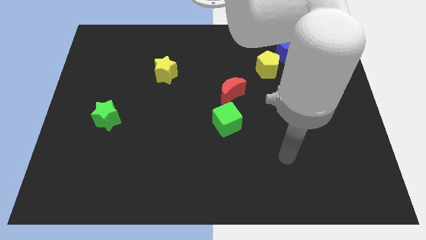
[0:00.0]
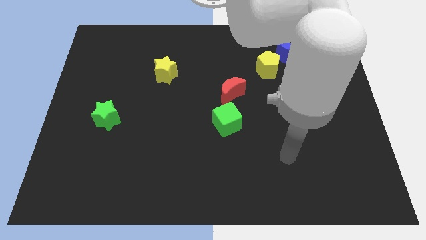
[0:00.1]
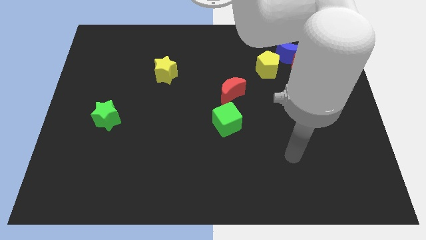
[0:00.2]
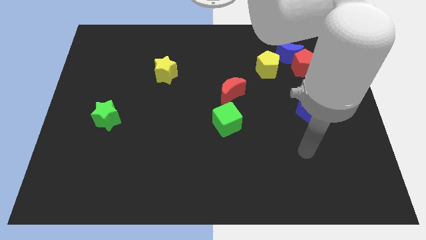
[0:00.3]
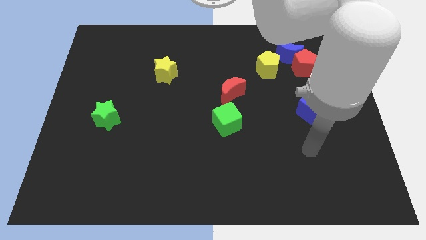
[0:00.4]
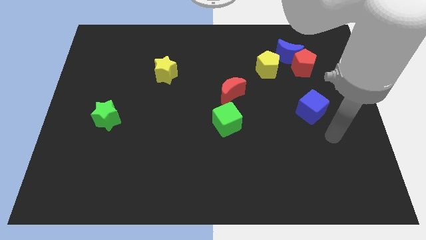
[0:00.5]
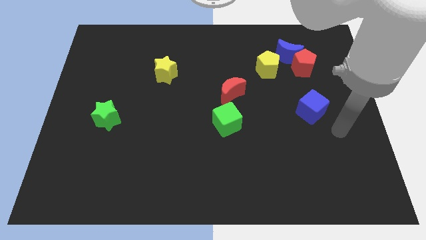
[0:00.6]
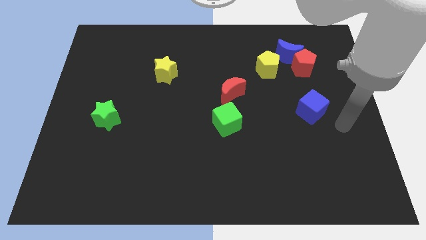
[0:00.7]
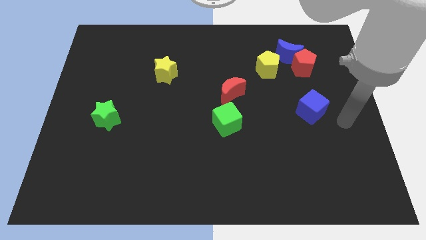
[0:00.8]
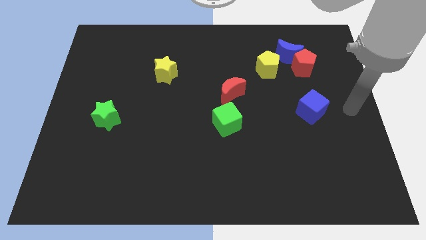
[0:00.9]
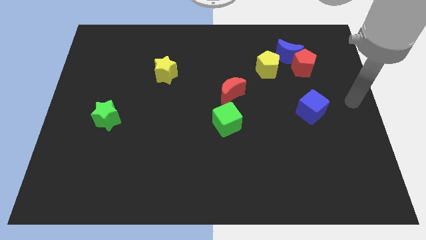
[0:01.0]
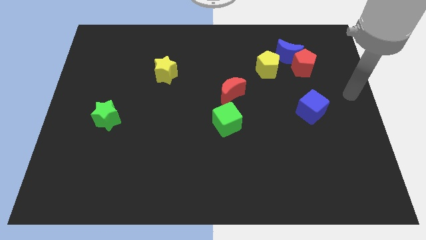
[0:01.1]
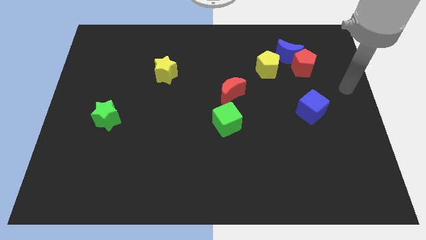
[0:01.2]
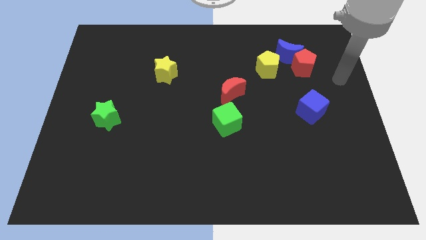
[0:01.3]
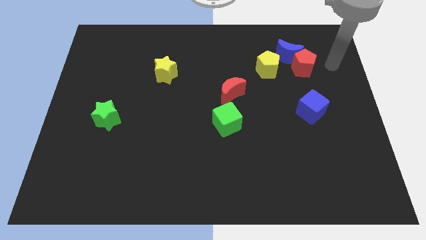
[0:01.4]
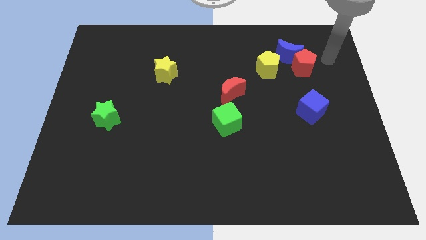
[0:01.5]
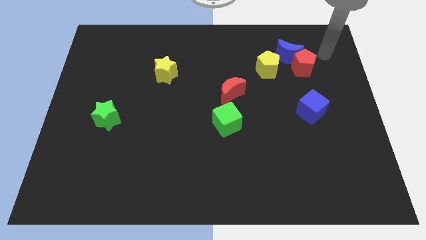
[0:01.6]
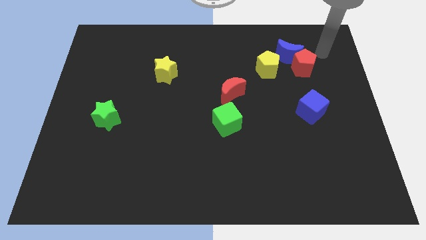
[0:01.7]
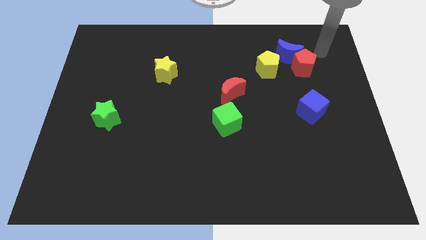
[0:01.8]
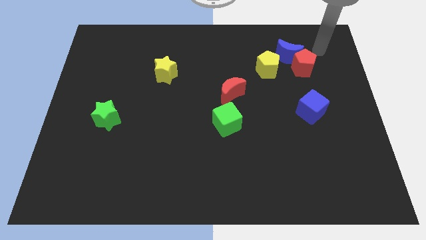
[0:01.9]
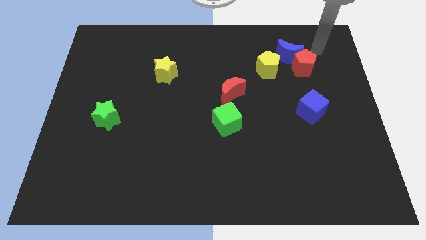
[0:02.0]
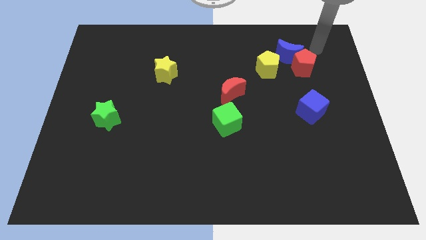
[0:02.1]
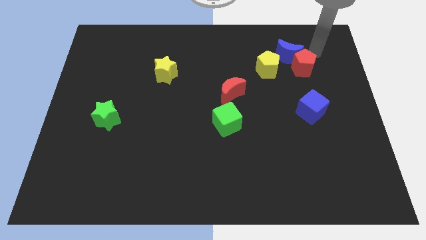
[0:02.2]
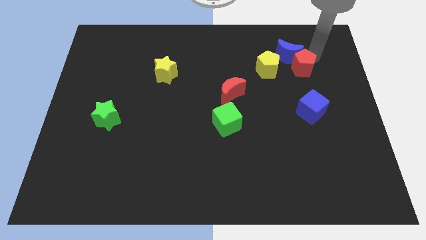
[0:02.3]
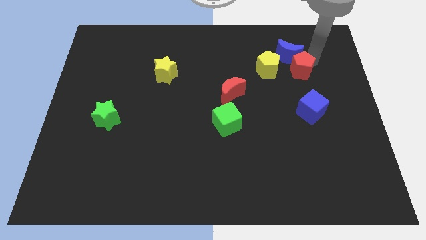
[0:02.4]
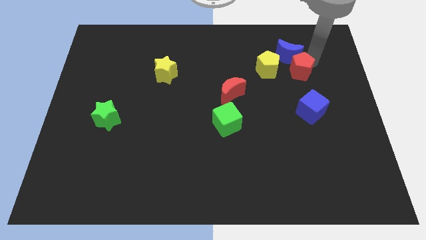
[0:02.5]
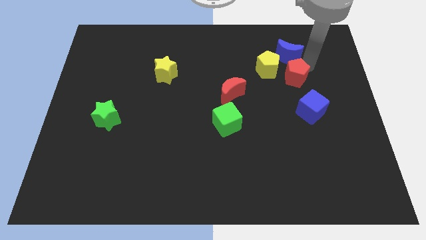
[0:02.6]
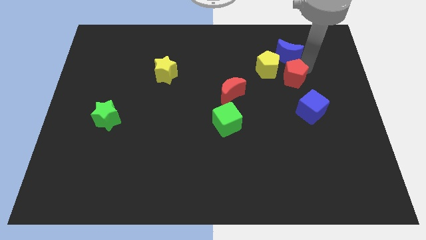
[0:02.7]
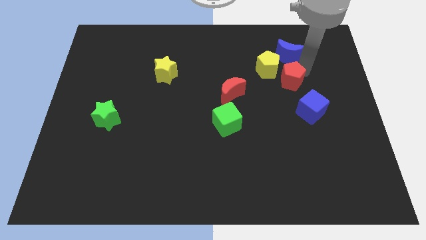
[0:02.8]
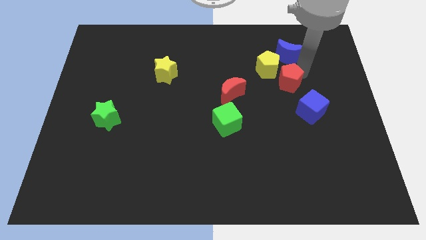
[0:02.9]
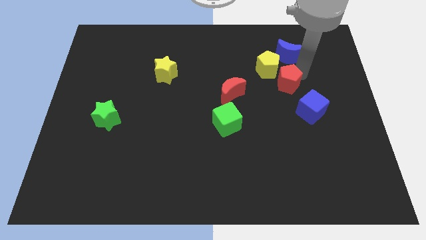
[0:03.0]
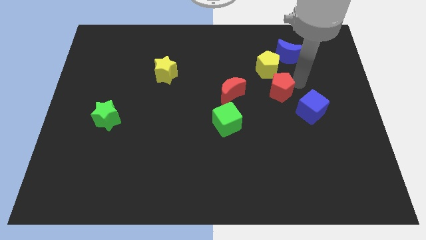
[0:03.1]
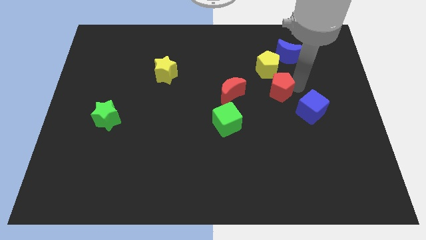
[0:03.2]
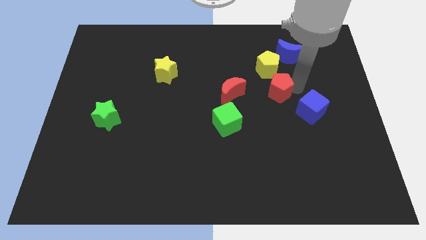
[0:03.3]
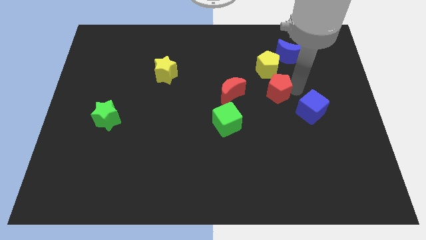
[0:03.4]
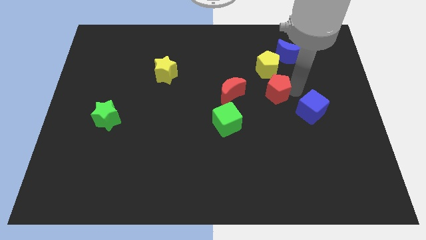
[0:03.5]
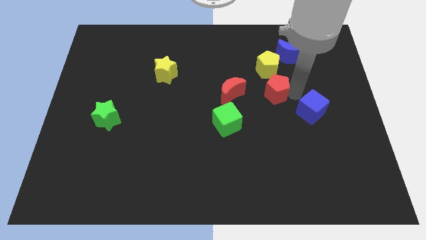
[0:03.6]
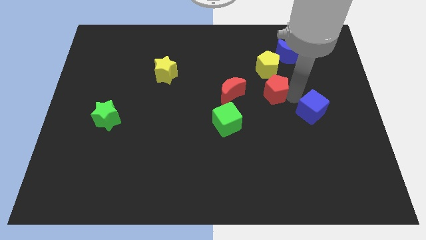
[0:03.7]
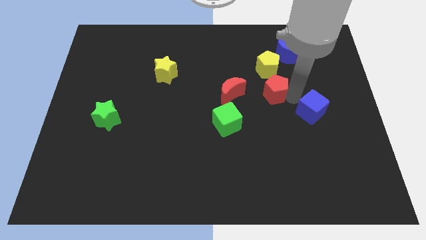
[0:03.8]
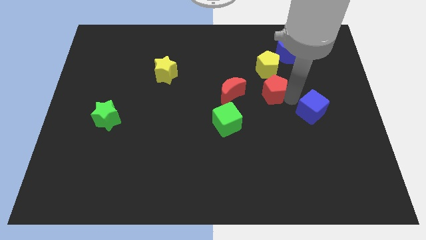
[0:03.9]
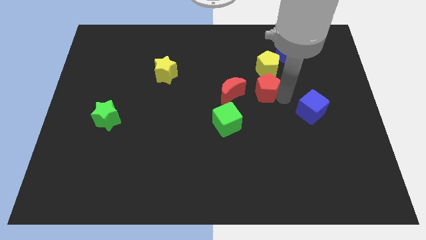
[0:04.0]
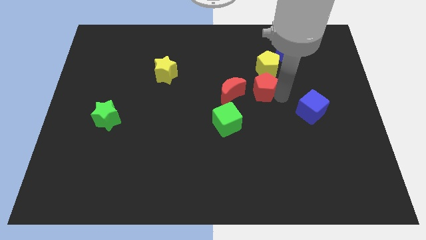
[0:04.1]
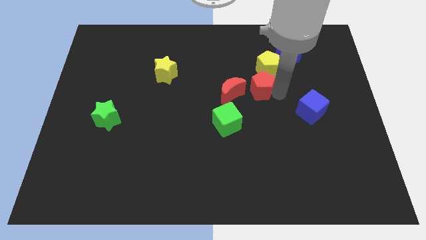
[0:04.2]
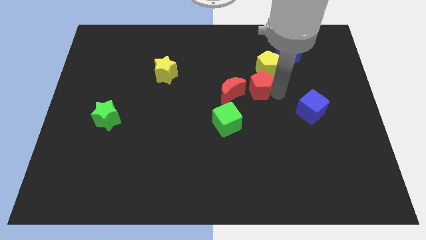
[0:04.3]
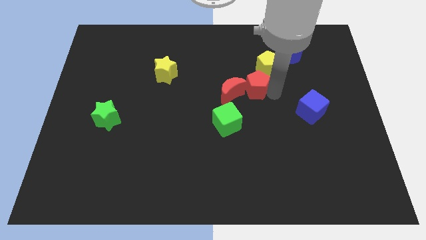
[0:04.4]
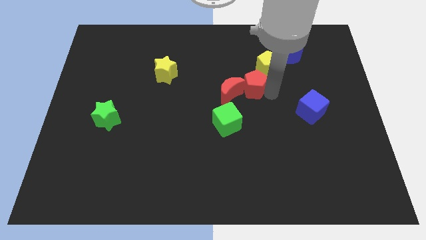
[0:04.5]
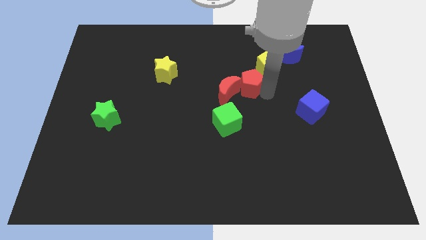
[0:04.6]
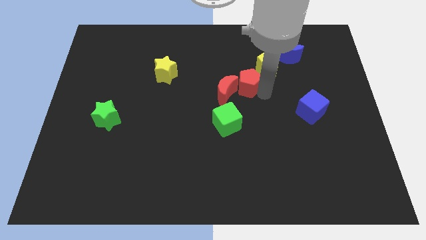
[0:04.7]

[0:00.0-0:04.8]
push the red pentagon close to the red moon

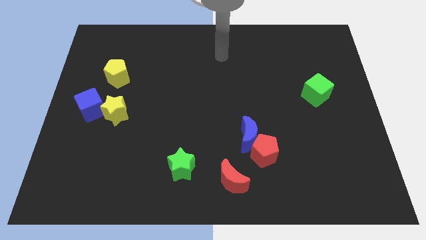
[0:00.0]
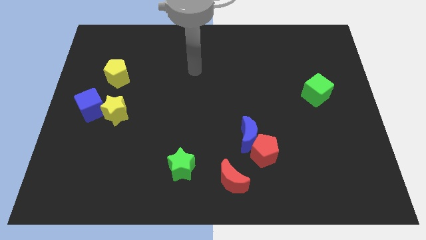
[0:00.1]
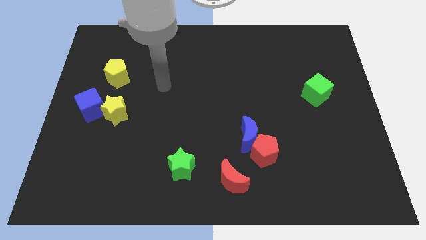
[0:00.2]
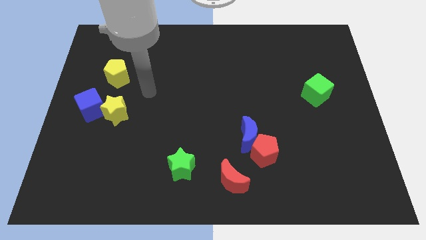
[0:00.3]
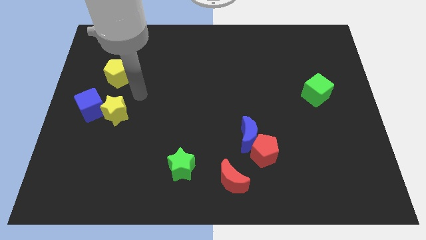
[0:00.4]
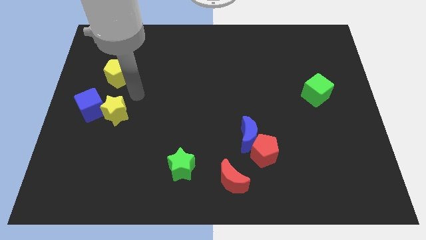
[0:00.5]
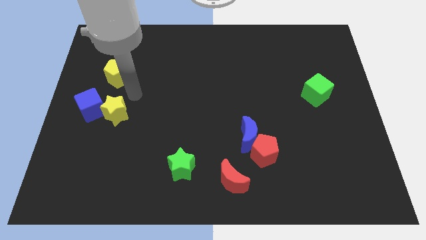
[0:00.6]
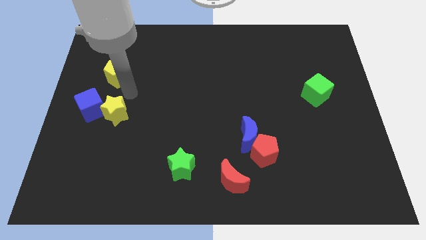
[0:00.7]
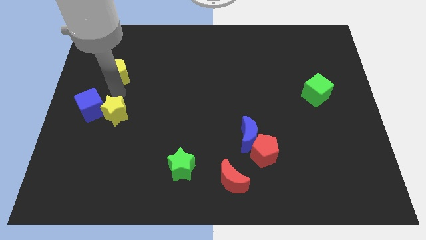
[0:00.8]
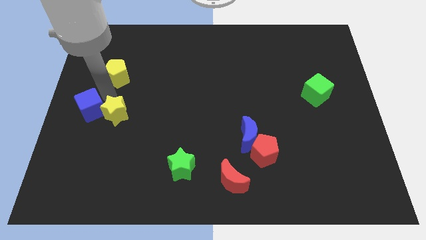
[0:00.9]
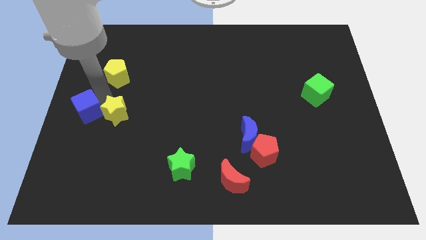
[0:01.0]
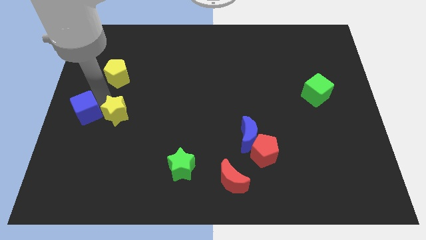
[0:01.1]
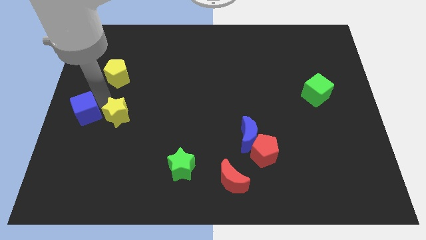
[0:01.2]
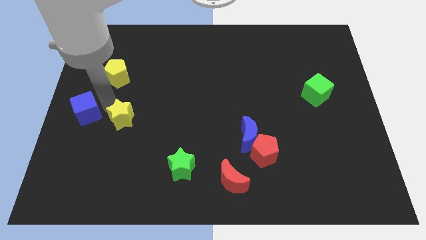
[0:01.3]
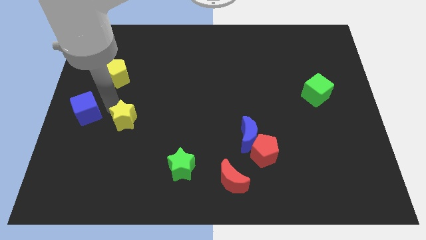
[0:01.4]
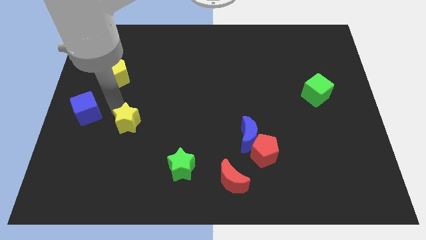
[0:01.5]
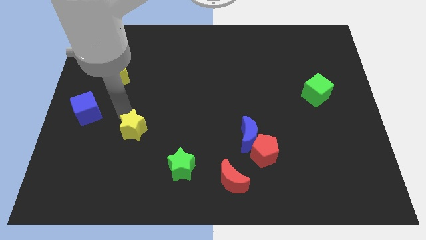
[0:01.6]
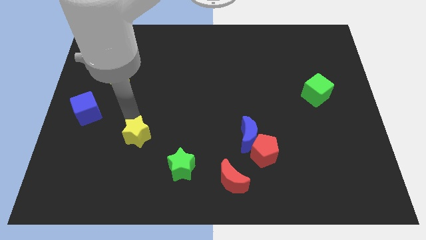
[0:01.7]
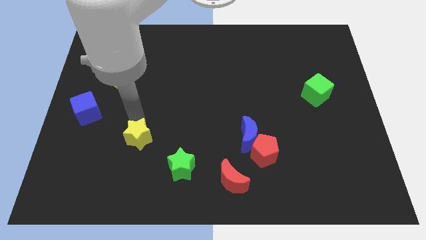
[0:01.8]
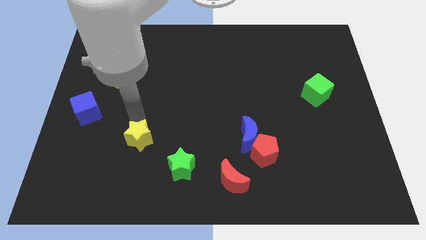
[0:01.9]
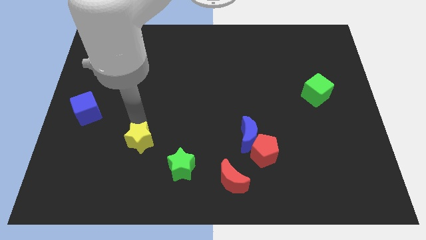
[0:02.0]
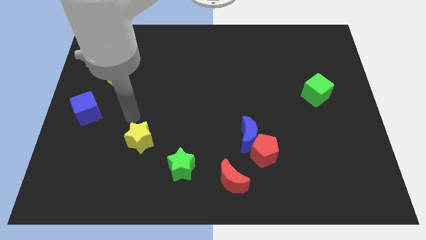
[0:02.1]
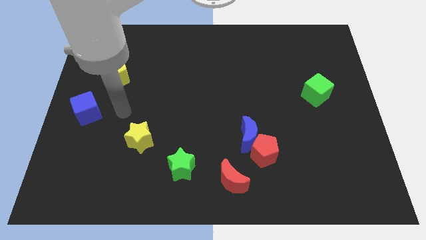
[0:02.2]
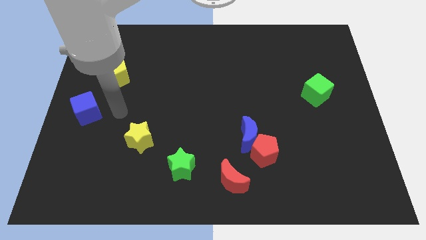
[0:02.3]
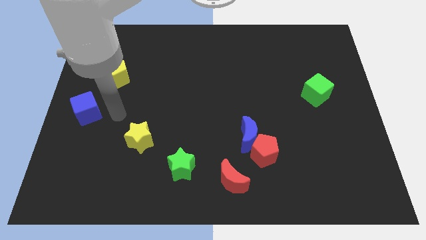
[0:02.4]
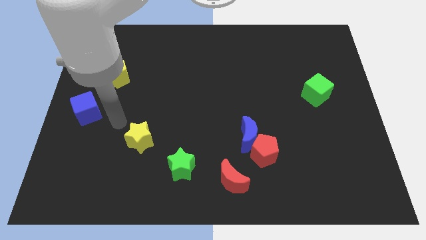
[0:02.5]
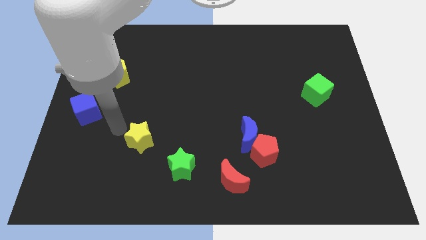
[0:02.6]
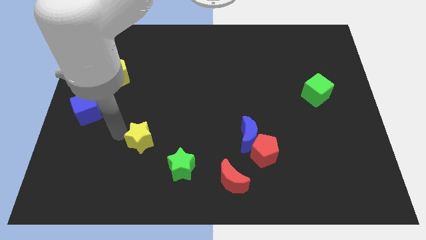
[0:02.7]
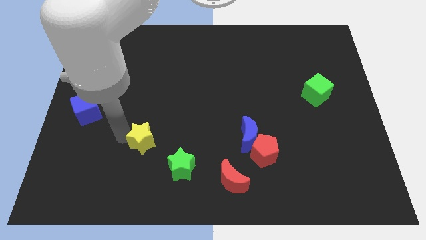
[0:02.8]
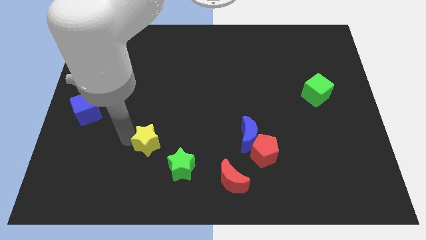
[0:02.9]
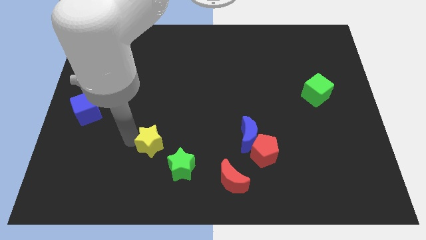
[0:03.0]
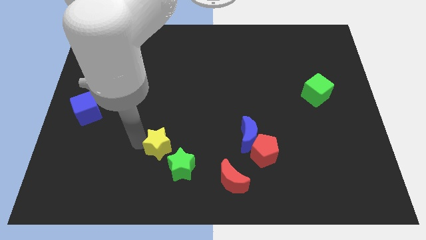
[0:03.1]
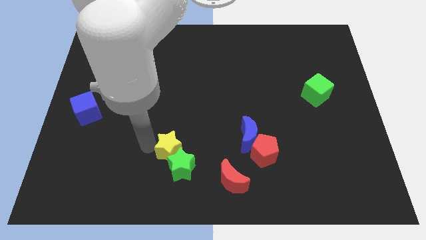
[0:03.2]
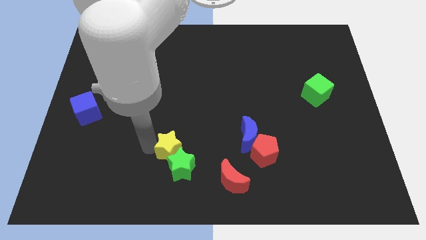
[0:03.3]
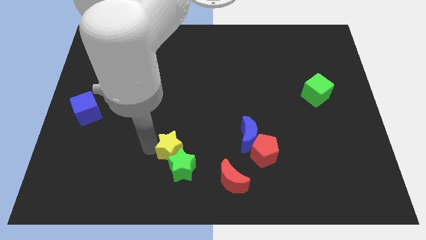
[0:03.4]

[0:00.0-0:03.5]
move the yellow star close to the green star
